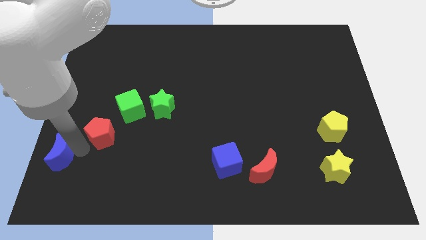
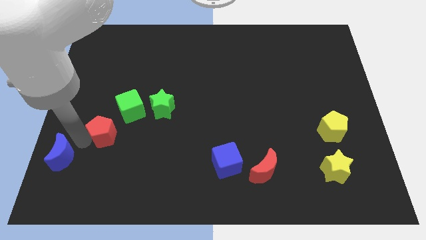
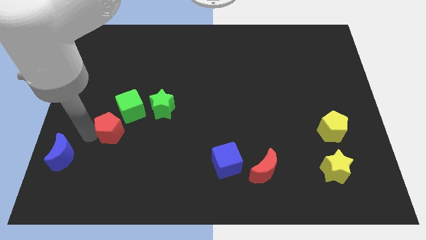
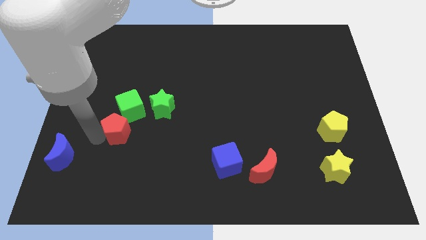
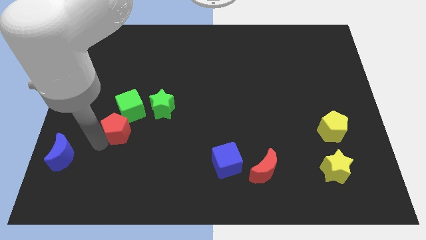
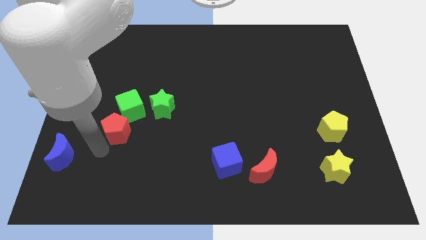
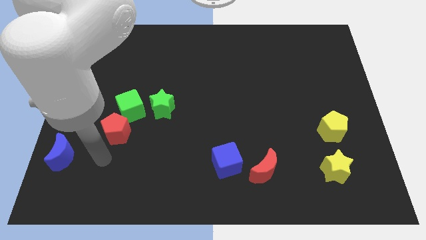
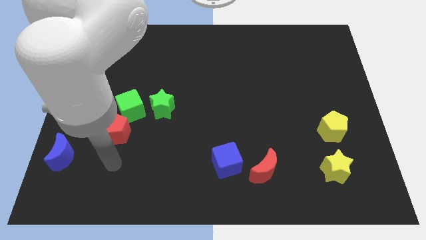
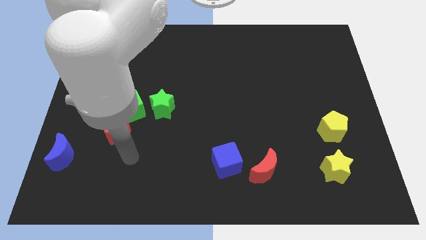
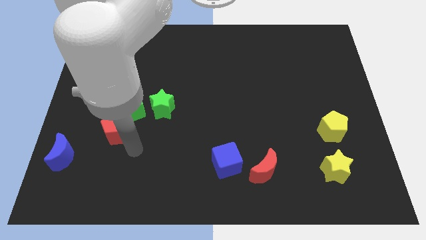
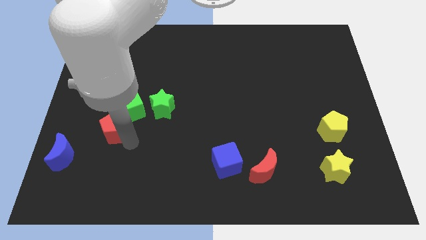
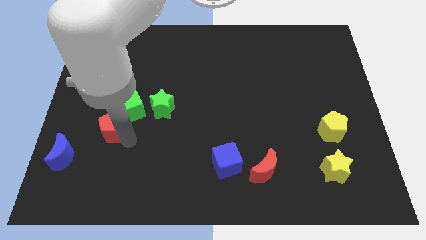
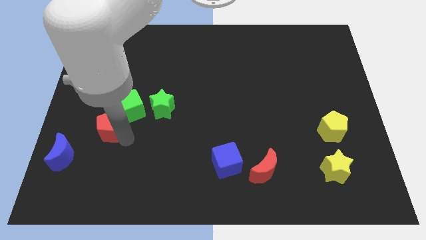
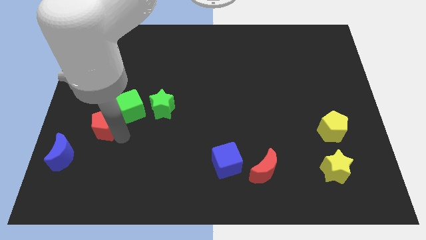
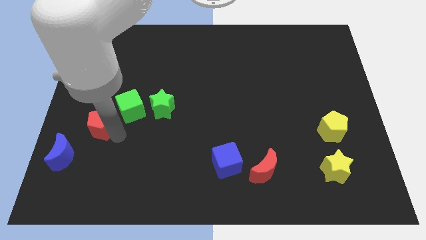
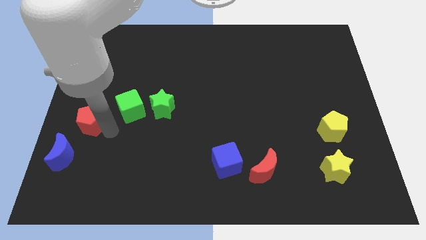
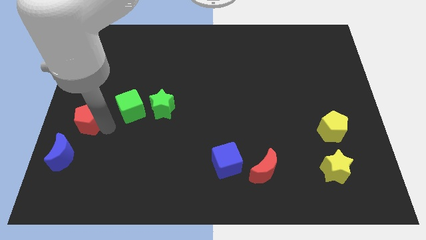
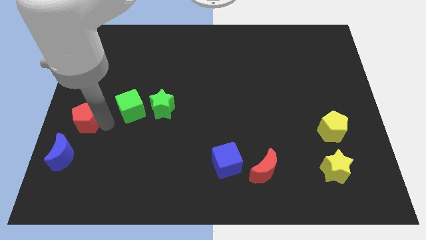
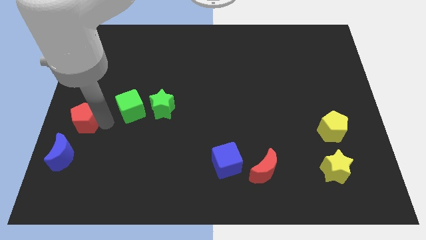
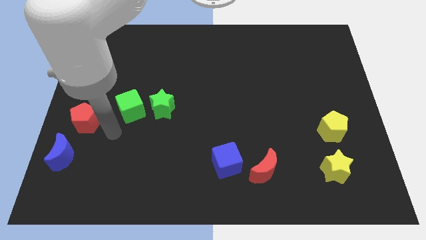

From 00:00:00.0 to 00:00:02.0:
move the red pentagon towards the left side center of the board

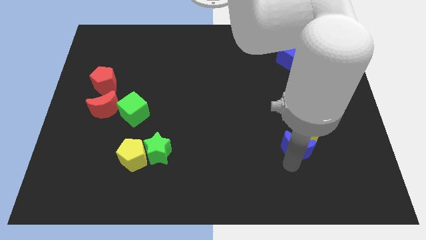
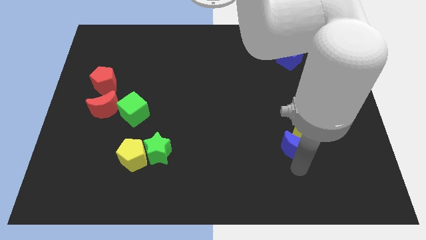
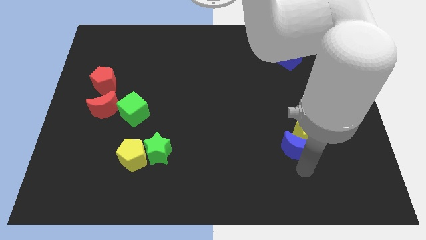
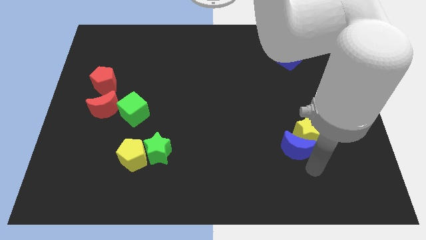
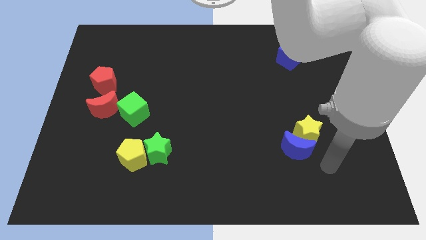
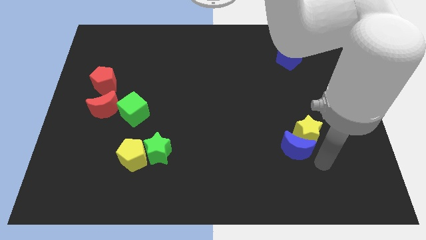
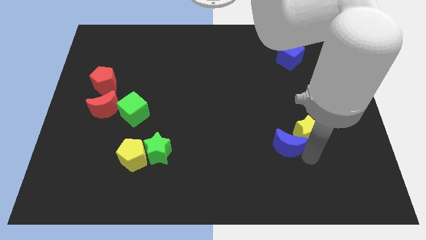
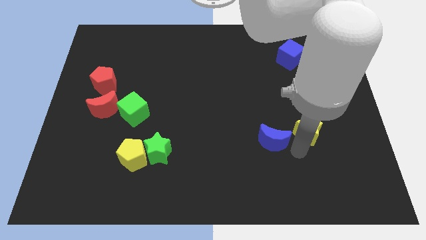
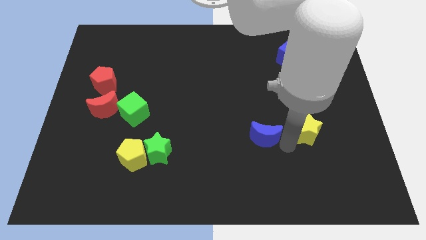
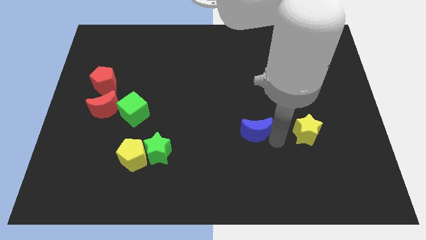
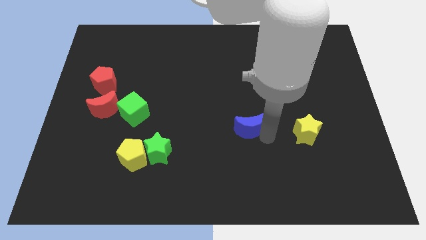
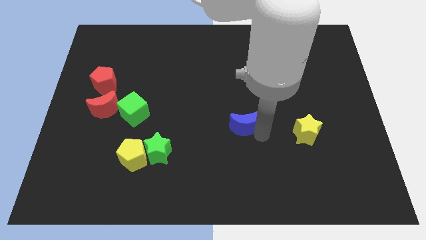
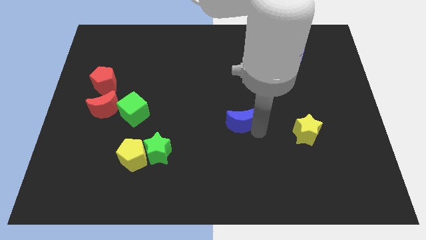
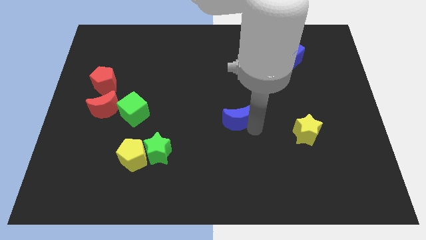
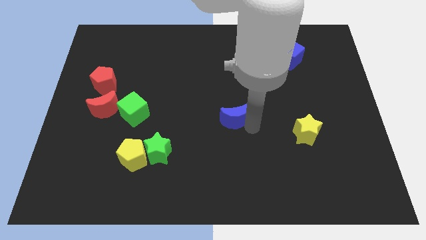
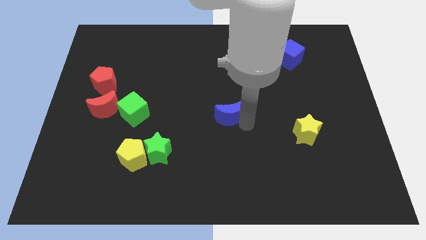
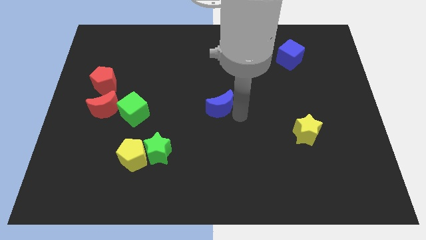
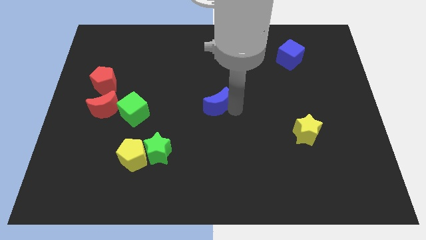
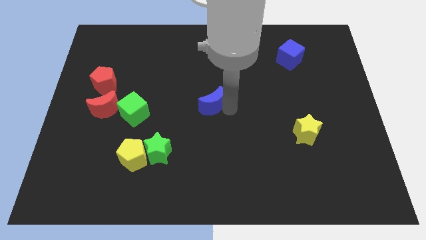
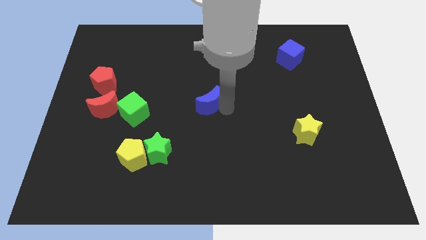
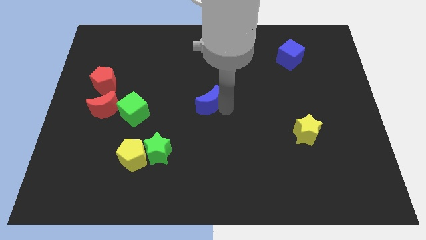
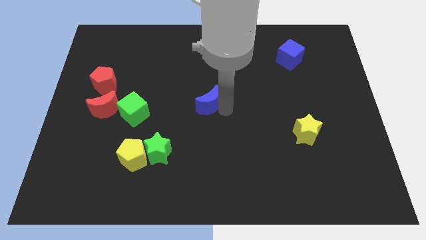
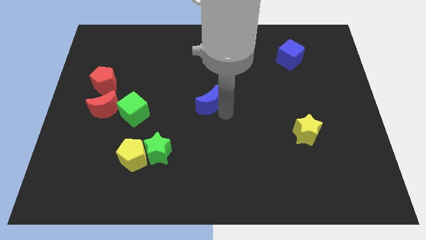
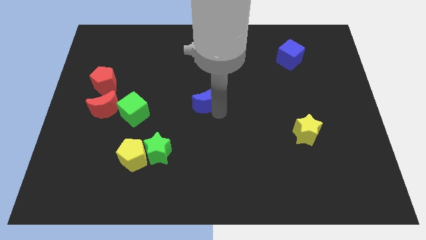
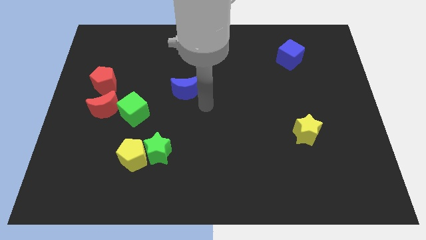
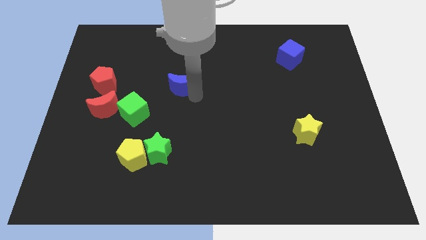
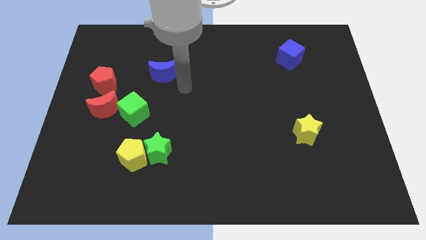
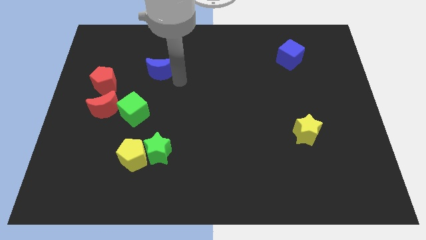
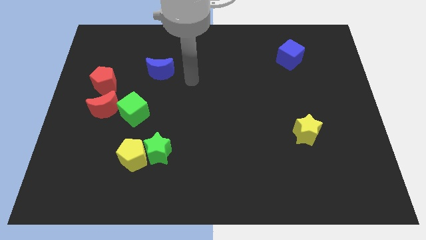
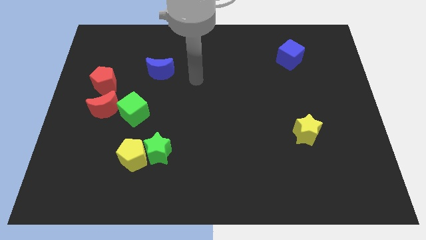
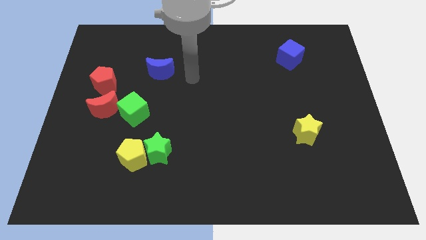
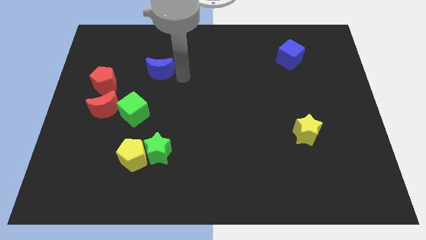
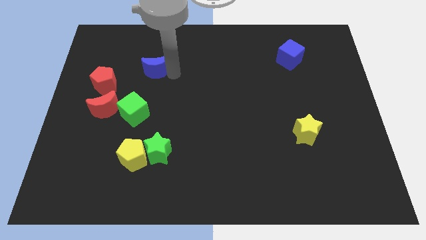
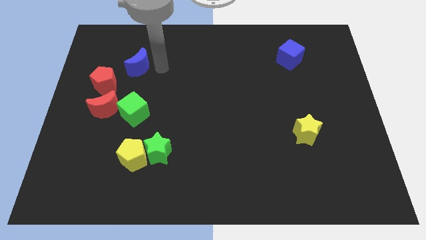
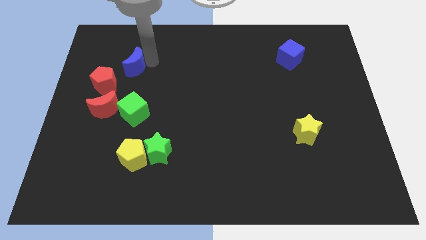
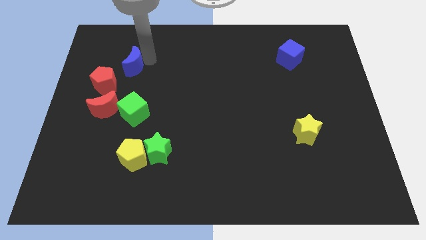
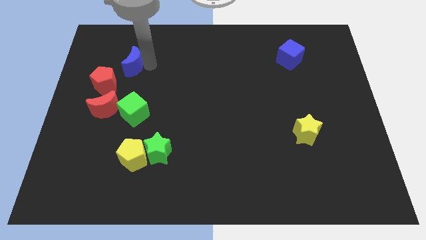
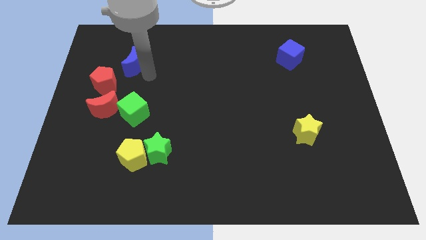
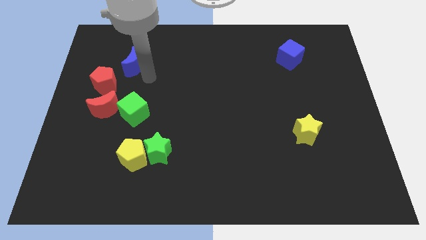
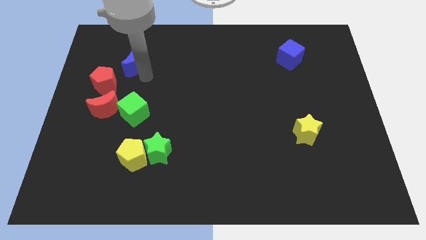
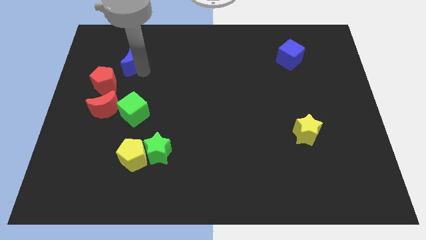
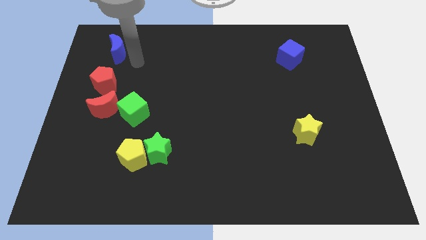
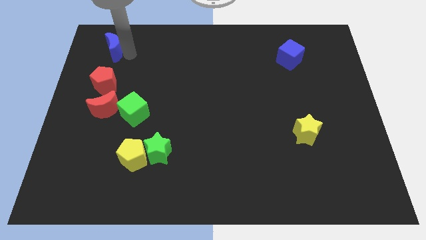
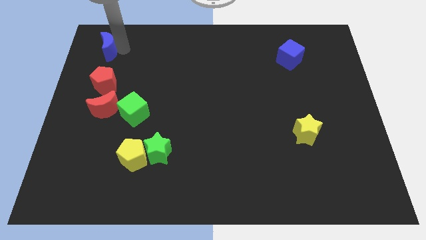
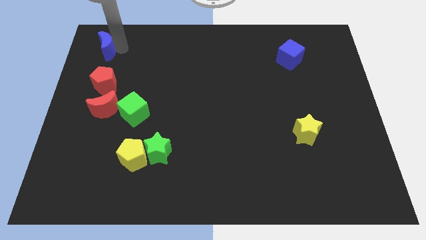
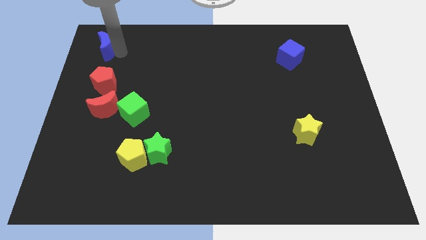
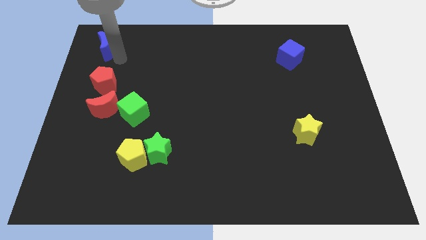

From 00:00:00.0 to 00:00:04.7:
slide the blue crescent towards the top of the red pentagon

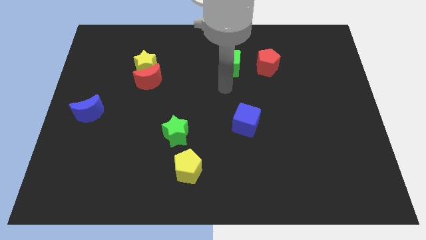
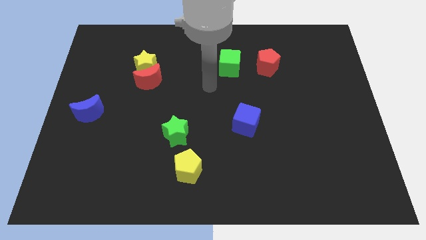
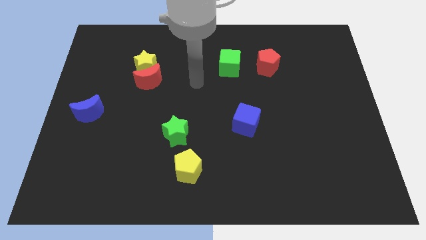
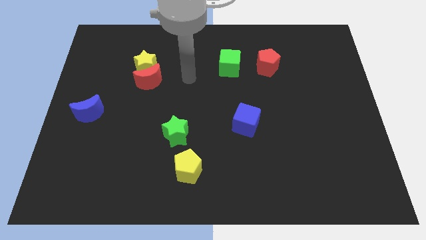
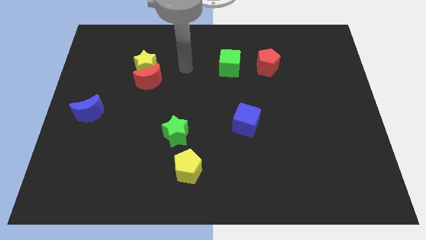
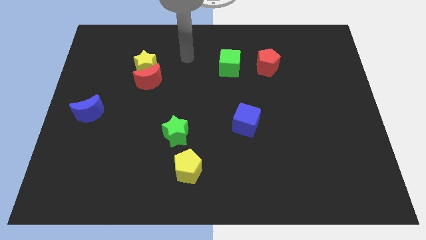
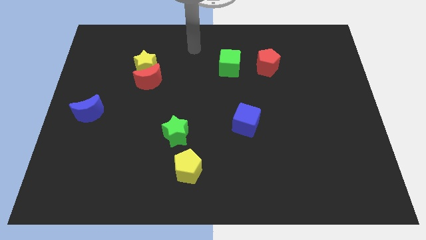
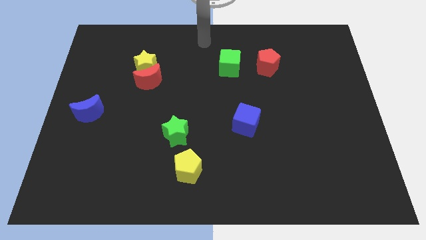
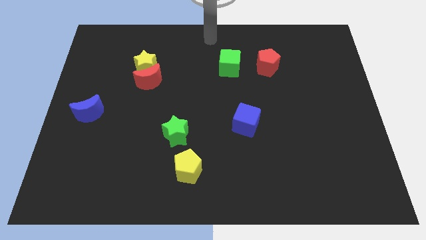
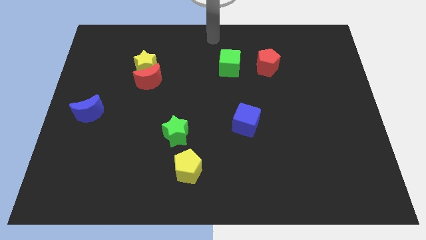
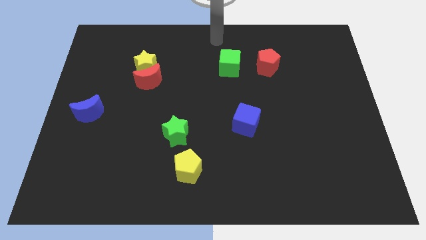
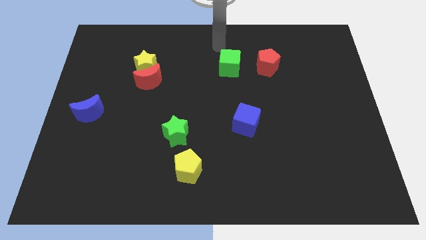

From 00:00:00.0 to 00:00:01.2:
move your arm to the top center of the board

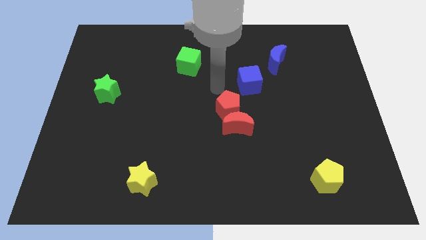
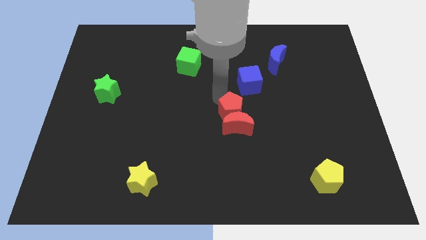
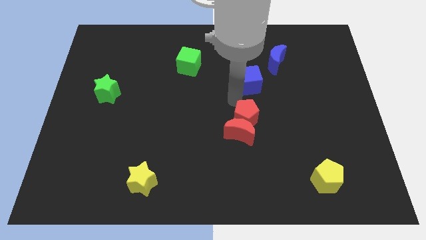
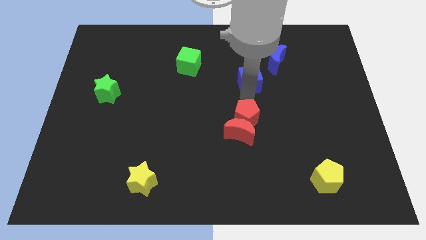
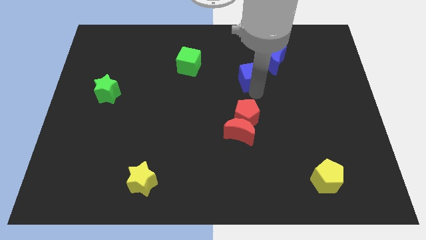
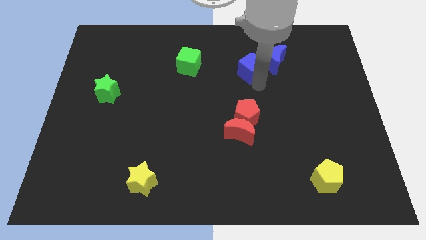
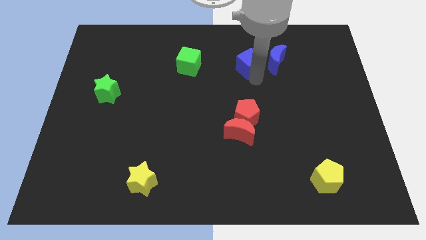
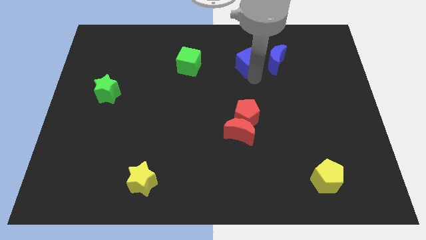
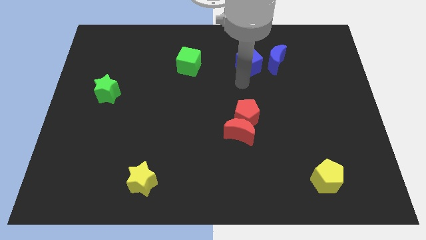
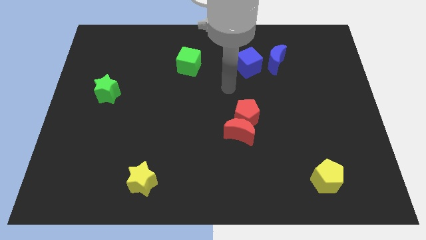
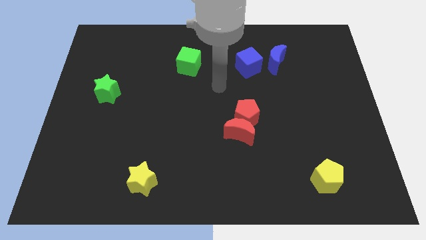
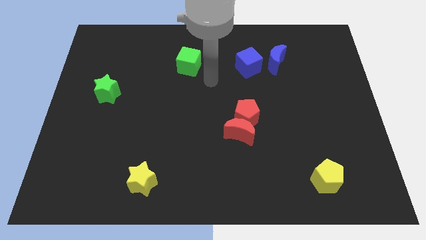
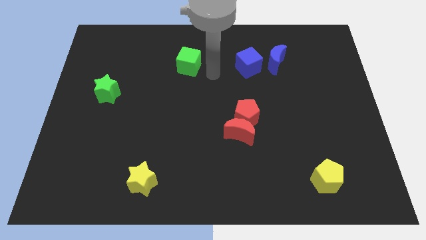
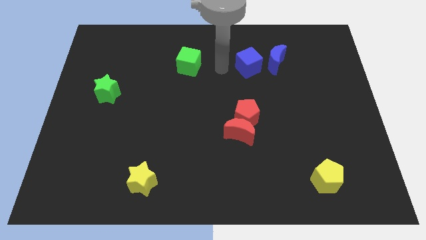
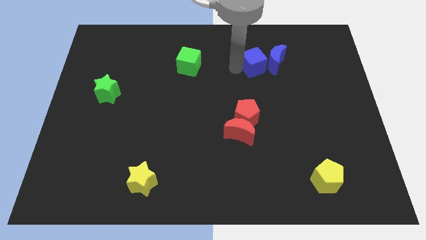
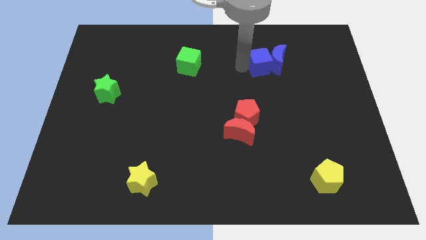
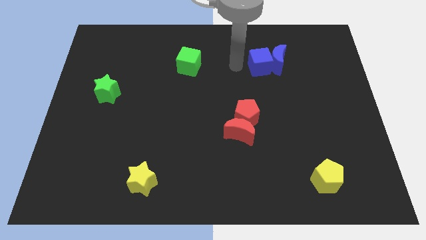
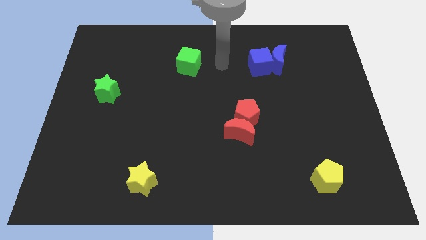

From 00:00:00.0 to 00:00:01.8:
separate the red blocks from blue blocks
